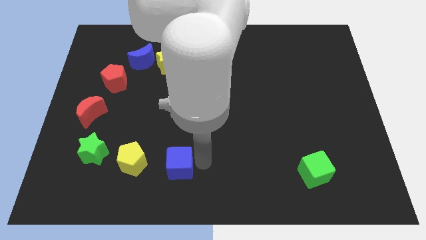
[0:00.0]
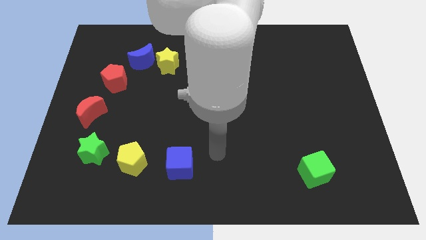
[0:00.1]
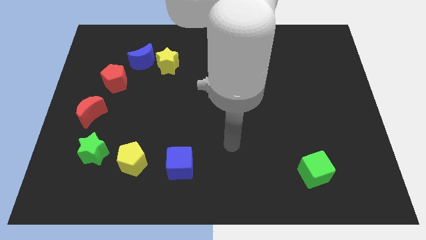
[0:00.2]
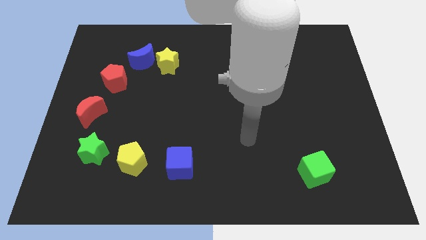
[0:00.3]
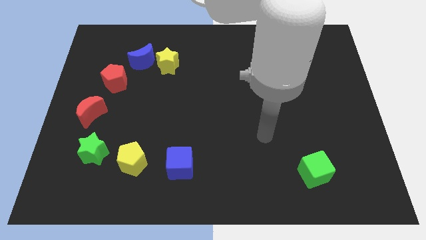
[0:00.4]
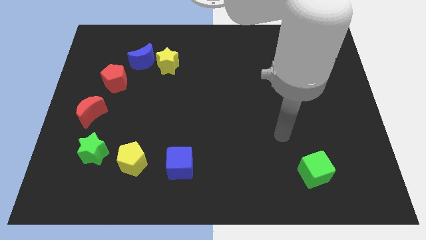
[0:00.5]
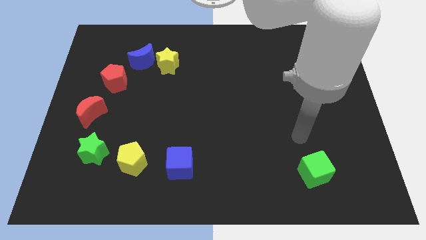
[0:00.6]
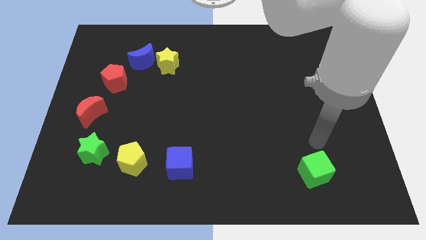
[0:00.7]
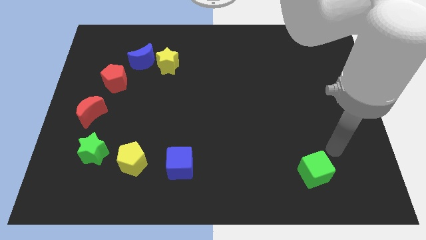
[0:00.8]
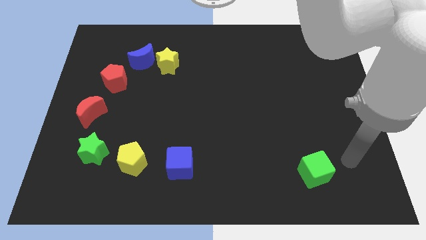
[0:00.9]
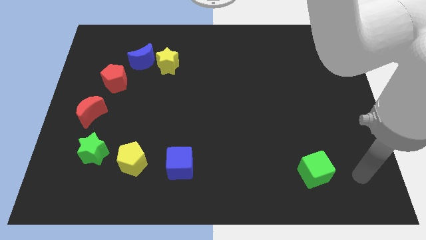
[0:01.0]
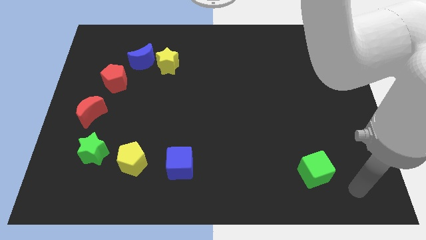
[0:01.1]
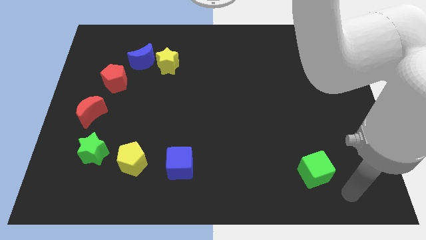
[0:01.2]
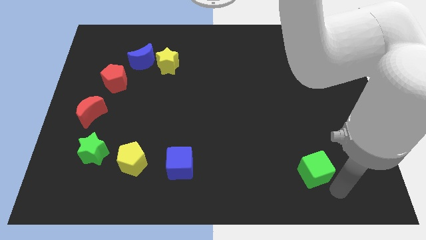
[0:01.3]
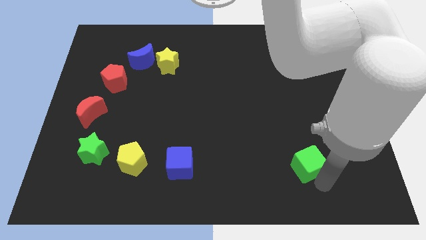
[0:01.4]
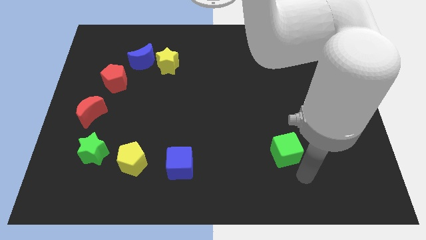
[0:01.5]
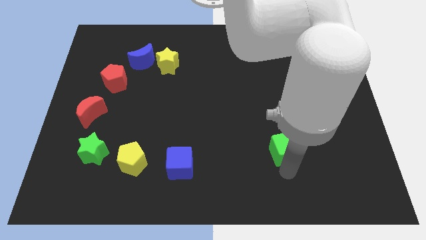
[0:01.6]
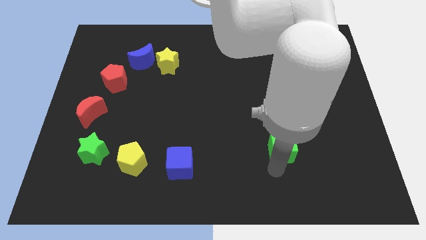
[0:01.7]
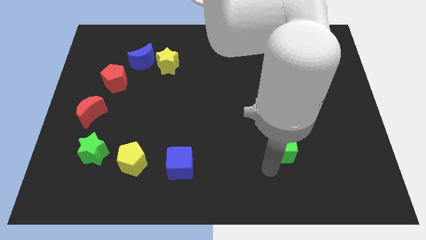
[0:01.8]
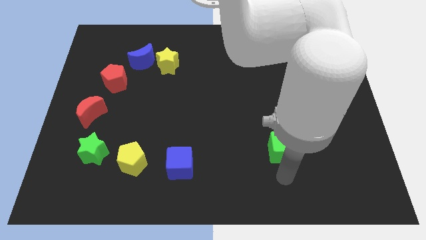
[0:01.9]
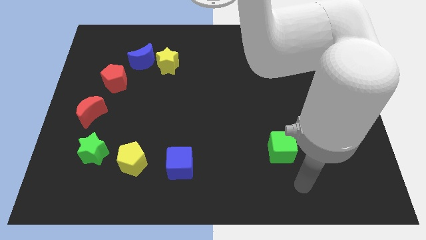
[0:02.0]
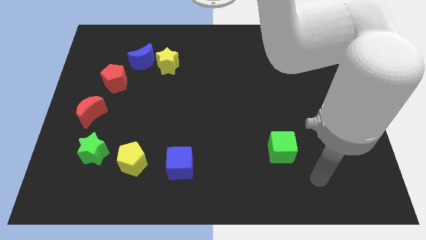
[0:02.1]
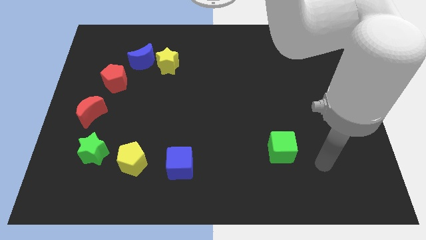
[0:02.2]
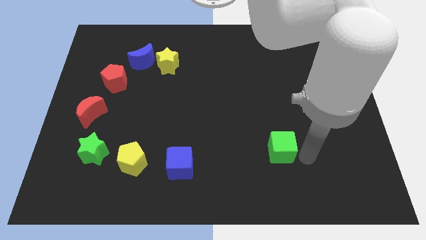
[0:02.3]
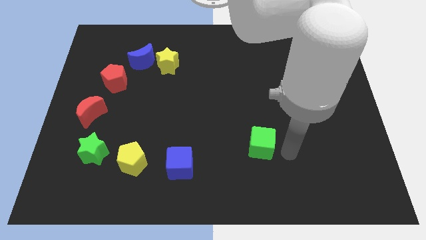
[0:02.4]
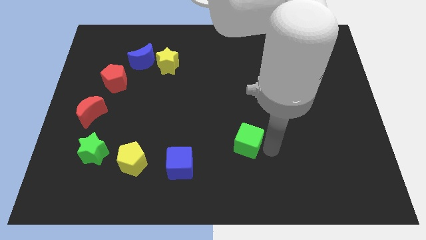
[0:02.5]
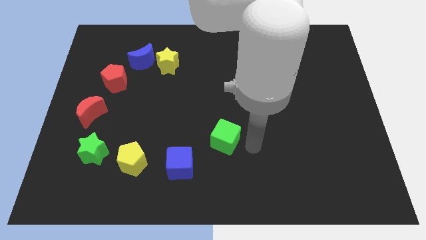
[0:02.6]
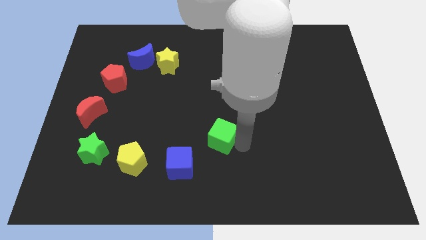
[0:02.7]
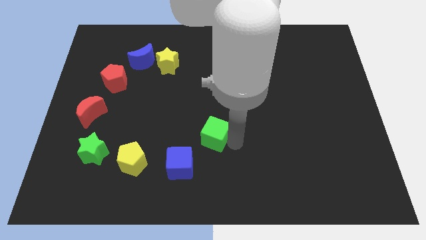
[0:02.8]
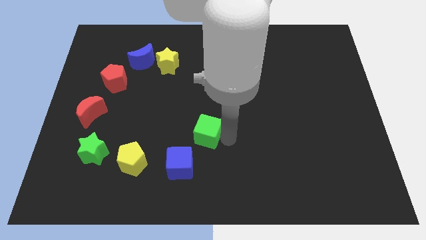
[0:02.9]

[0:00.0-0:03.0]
put the green cube diagonally to blue cube

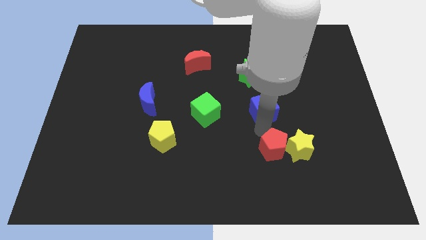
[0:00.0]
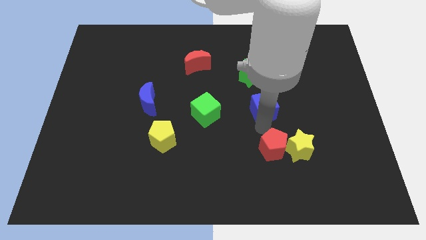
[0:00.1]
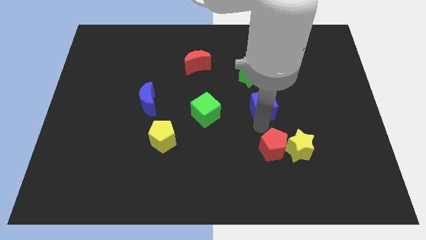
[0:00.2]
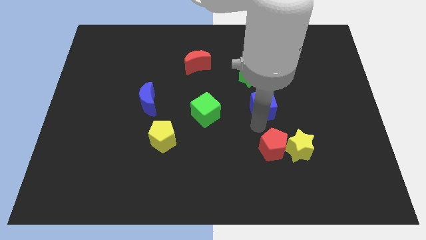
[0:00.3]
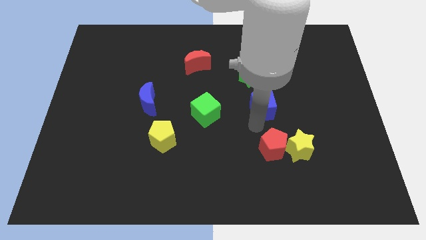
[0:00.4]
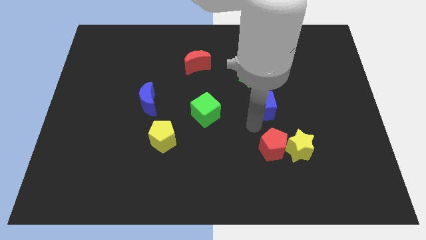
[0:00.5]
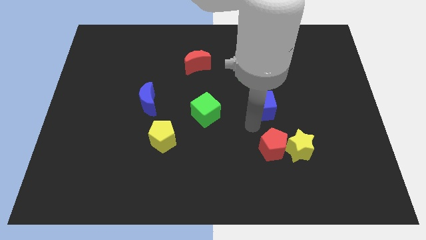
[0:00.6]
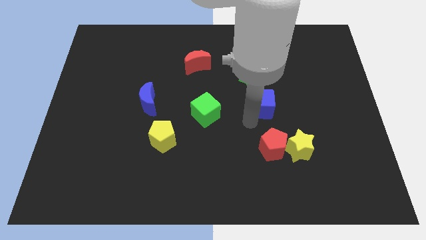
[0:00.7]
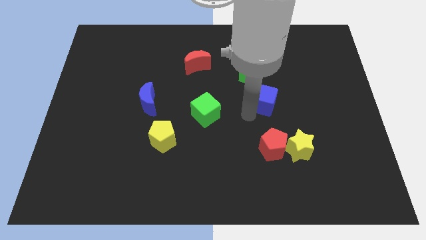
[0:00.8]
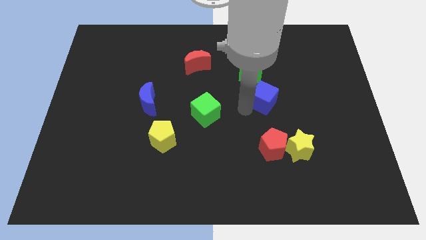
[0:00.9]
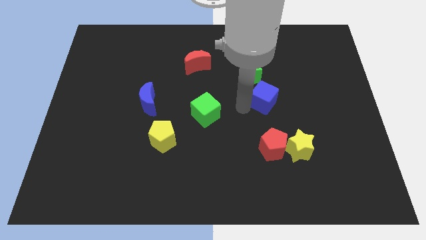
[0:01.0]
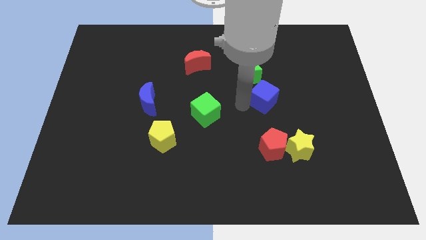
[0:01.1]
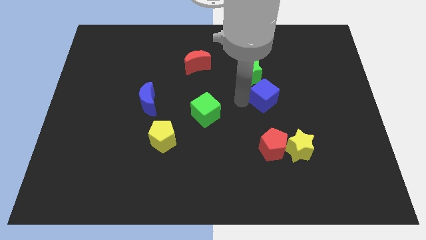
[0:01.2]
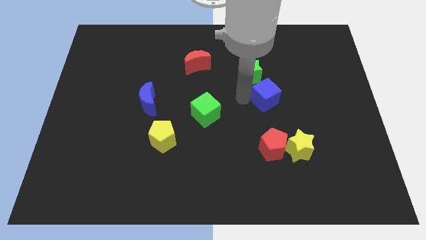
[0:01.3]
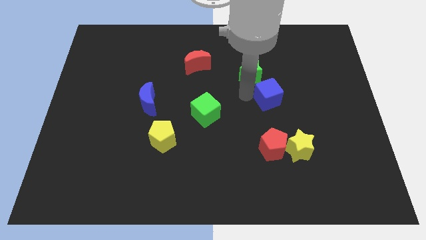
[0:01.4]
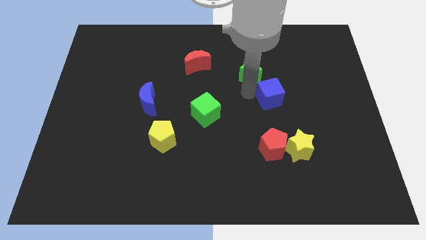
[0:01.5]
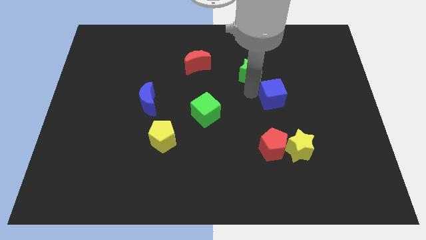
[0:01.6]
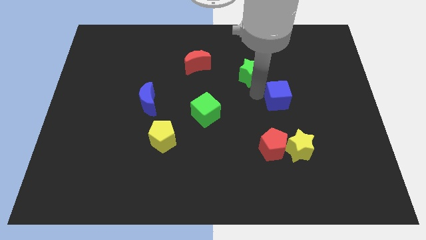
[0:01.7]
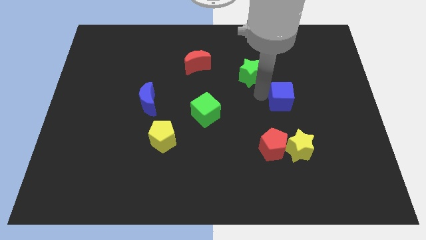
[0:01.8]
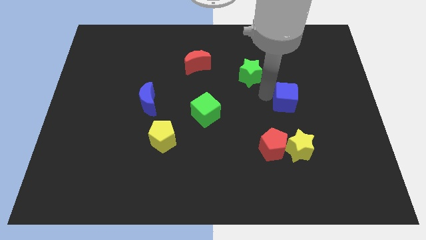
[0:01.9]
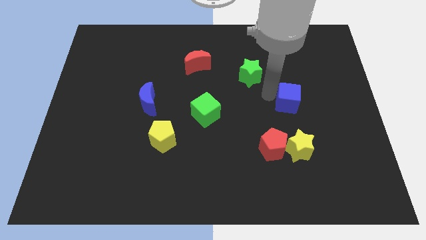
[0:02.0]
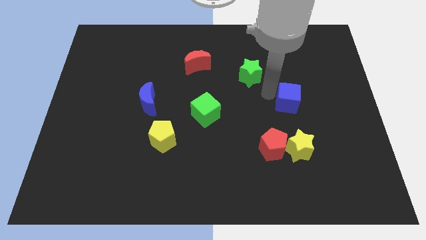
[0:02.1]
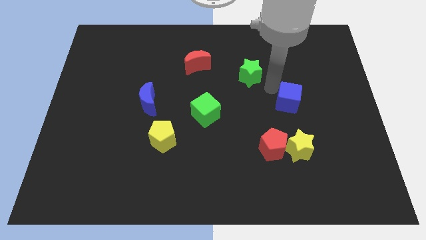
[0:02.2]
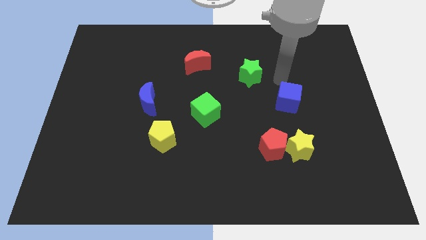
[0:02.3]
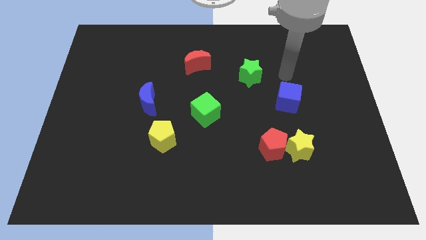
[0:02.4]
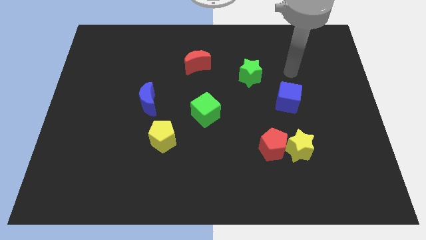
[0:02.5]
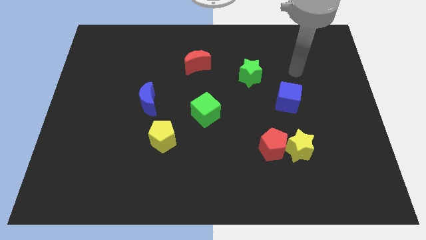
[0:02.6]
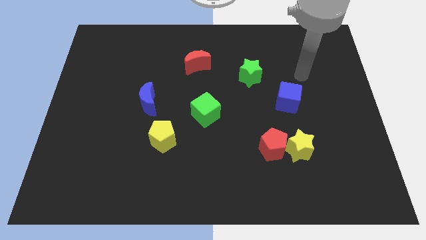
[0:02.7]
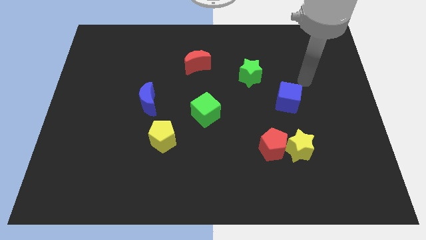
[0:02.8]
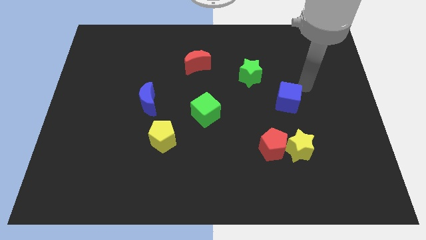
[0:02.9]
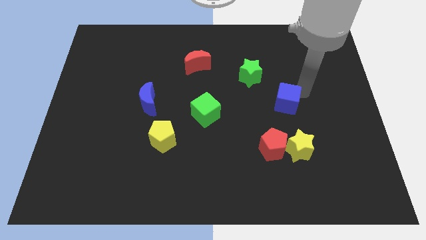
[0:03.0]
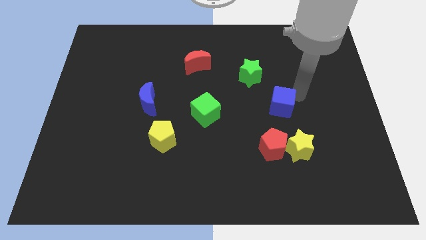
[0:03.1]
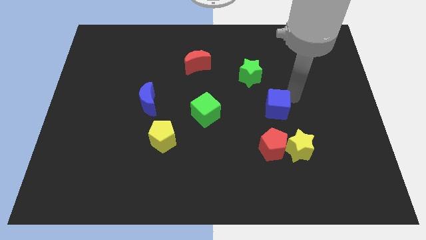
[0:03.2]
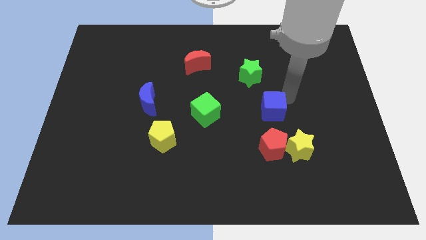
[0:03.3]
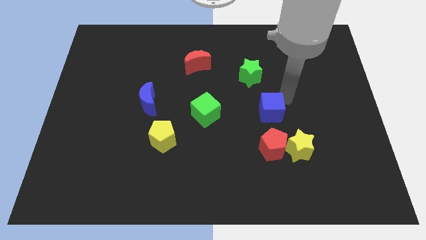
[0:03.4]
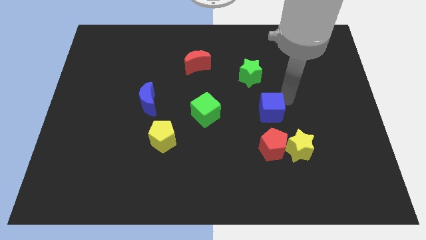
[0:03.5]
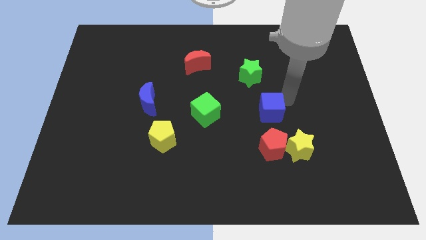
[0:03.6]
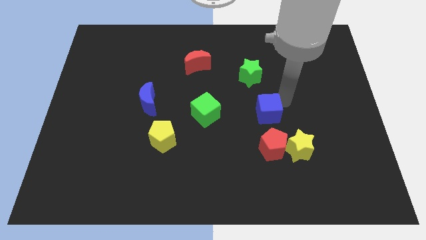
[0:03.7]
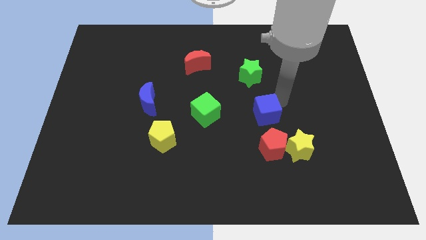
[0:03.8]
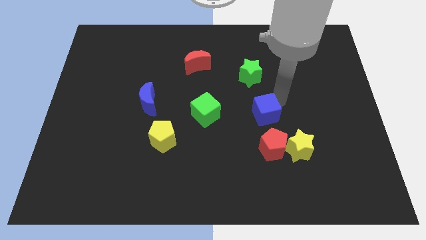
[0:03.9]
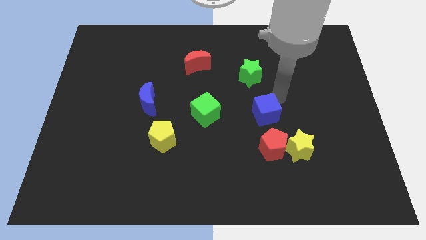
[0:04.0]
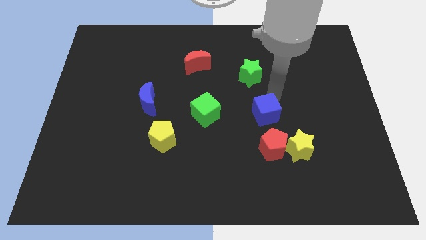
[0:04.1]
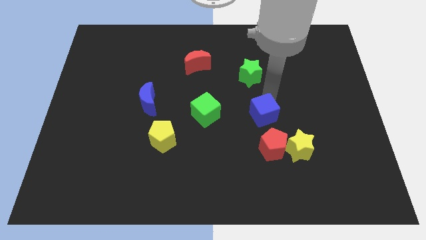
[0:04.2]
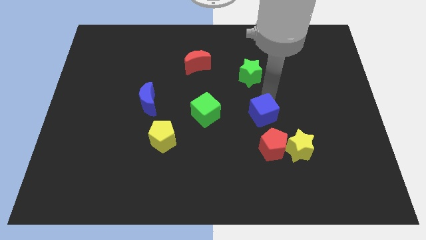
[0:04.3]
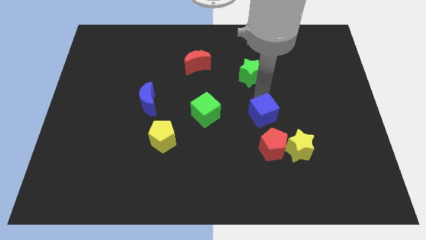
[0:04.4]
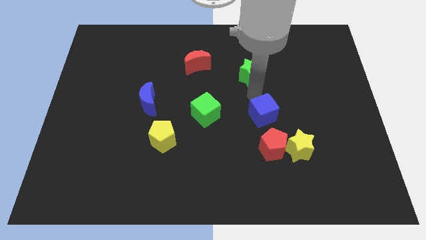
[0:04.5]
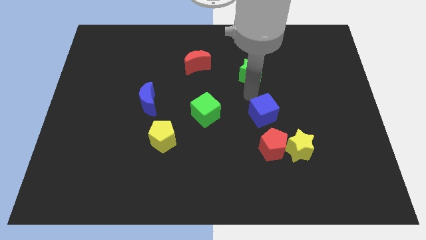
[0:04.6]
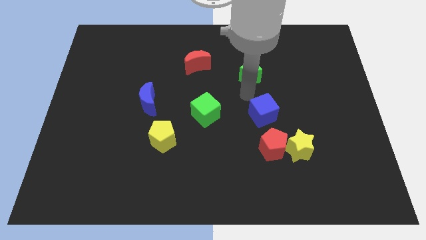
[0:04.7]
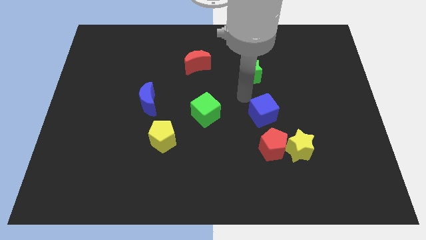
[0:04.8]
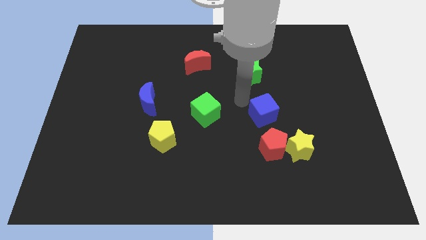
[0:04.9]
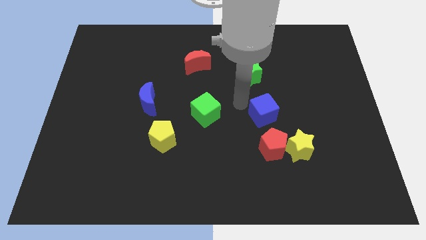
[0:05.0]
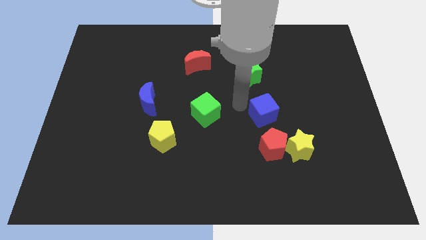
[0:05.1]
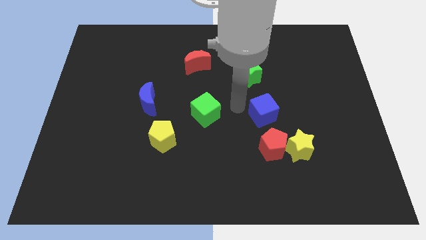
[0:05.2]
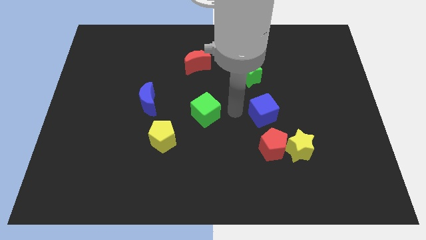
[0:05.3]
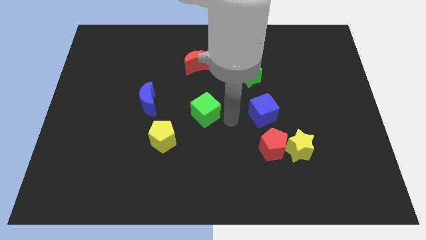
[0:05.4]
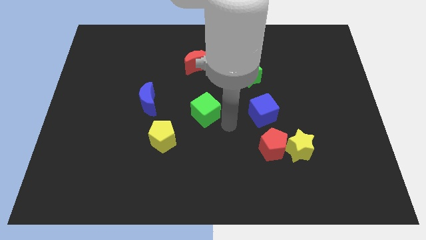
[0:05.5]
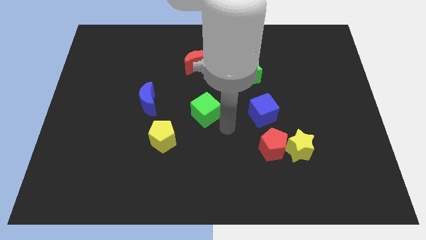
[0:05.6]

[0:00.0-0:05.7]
put the blue cube above the red one

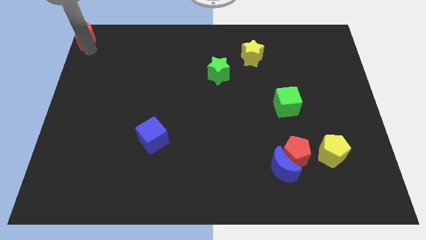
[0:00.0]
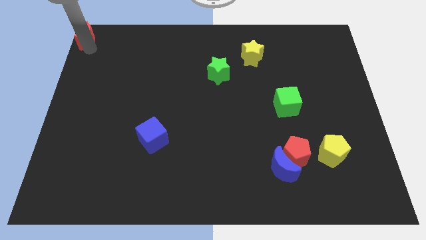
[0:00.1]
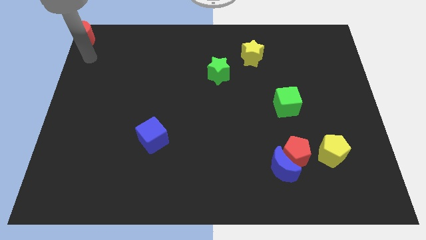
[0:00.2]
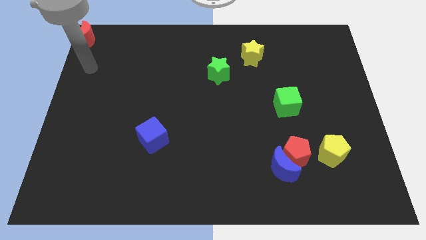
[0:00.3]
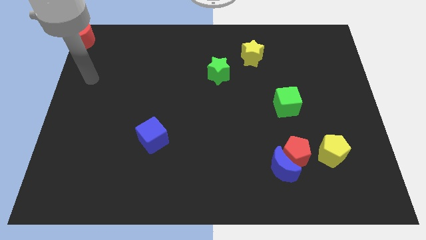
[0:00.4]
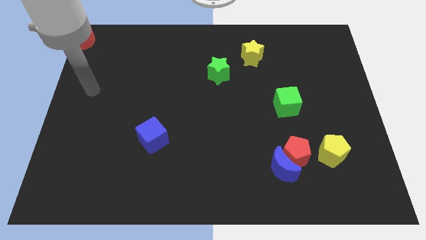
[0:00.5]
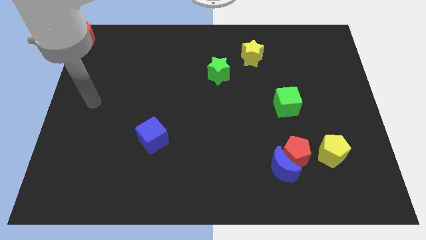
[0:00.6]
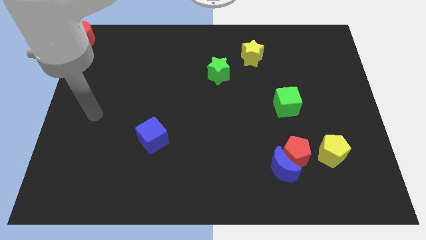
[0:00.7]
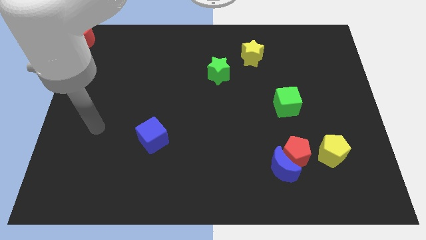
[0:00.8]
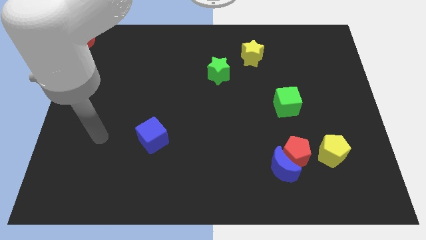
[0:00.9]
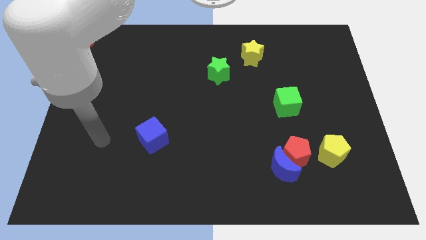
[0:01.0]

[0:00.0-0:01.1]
move your arm away from red moon
